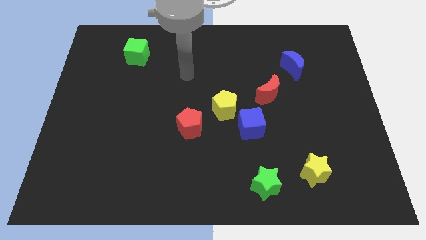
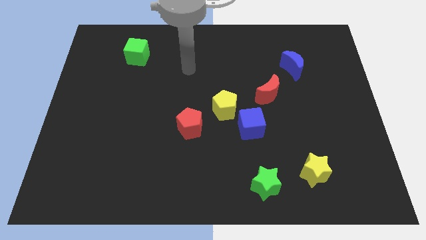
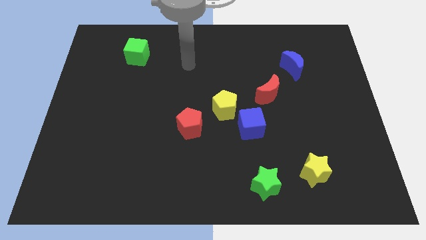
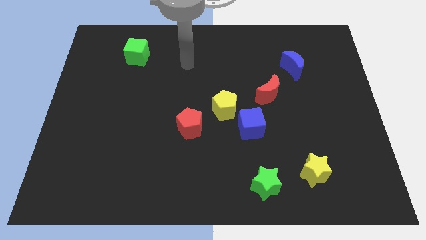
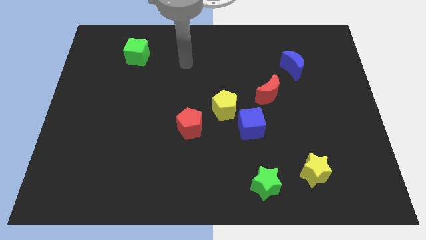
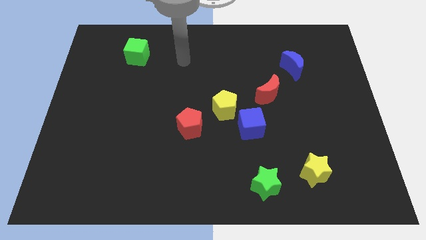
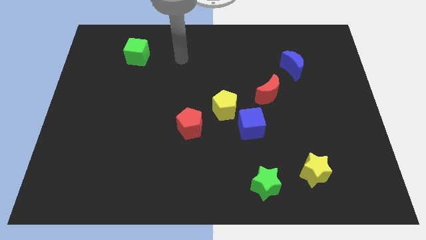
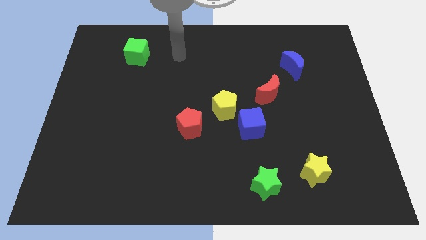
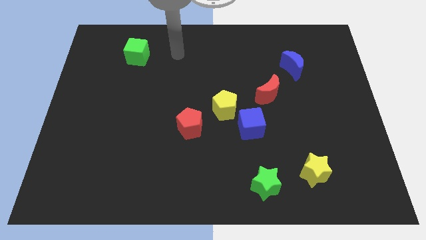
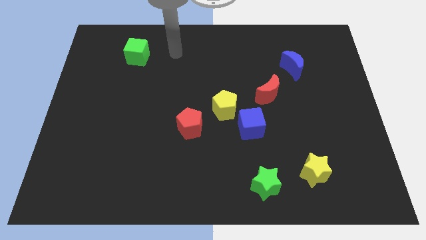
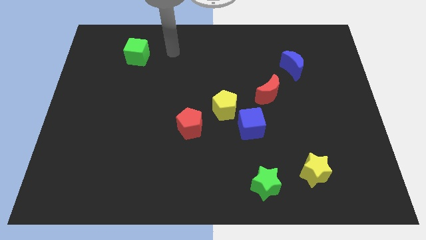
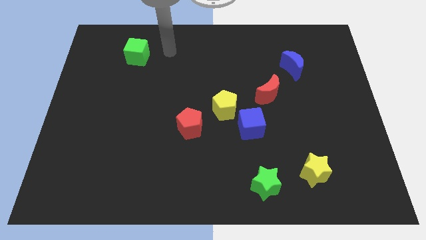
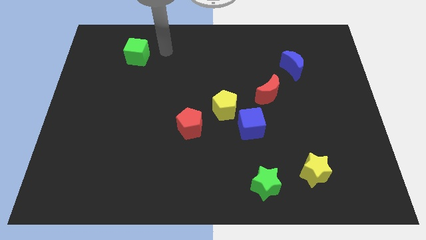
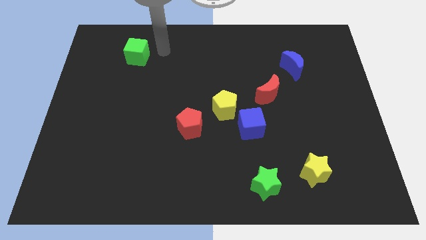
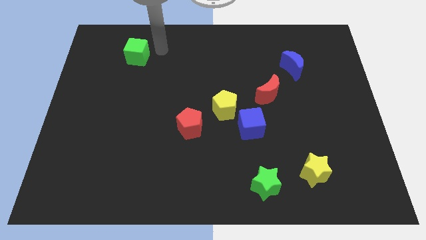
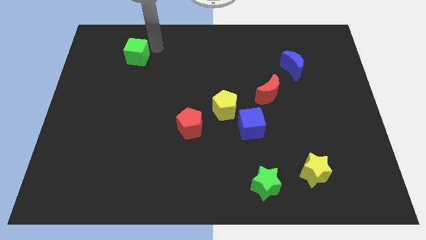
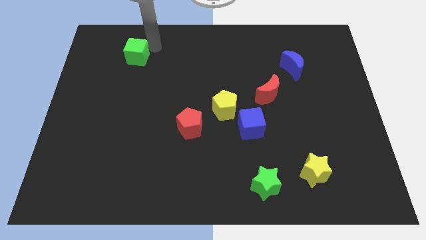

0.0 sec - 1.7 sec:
point your arm to the top of the green cube

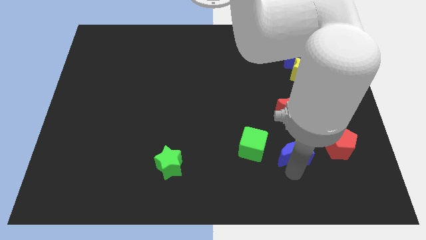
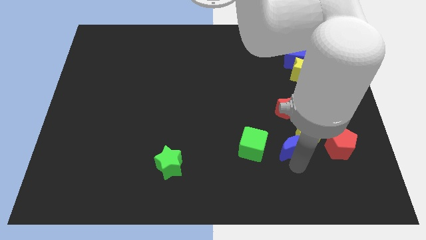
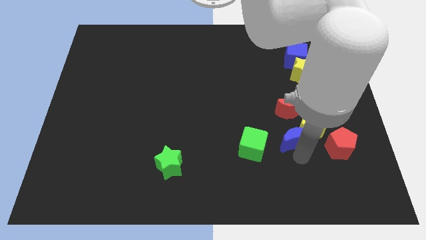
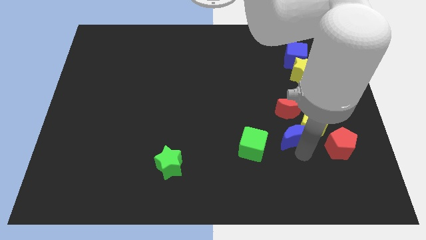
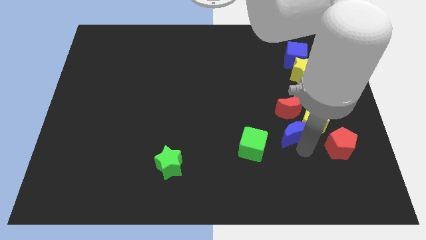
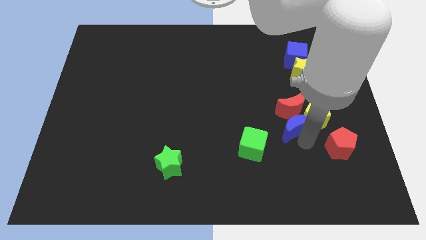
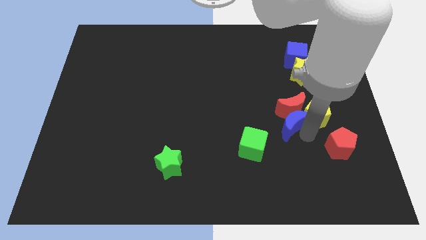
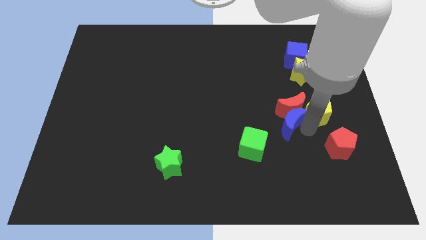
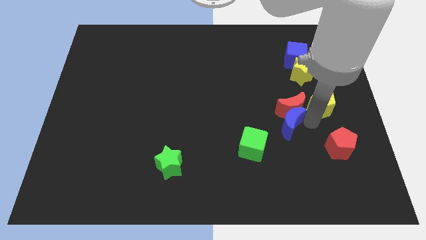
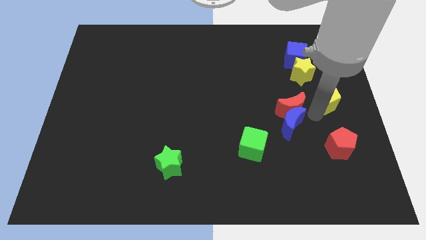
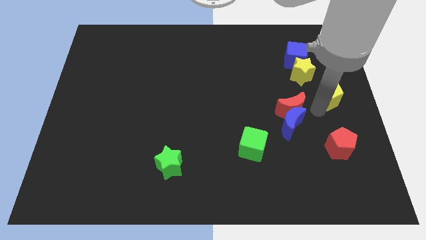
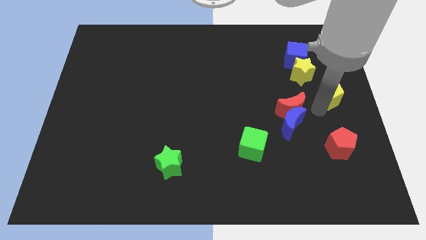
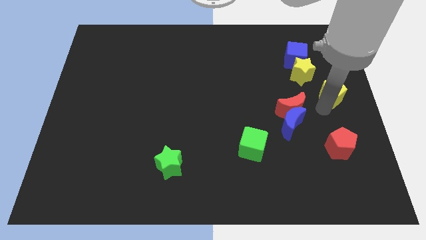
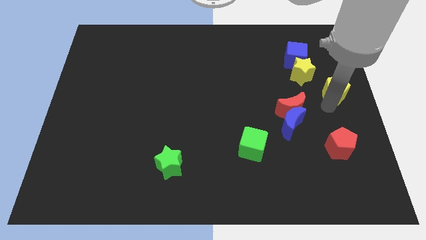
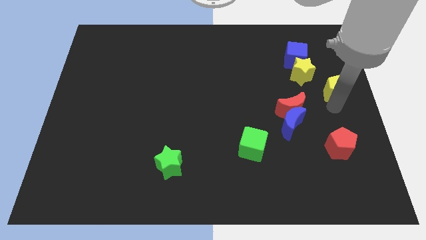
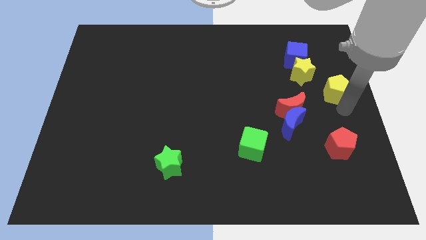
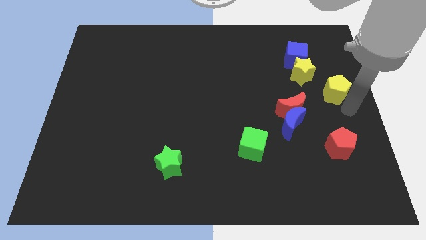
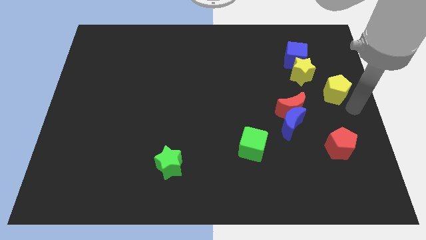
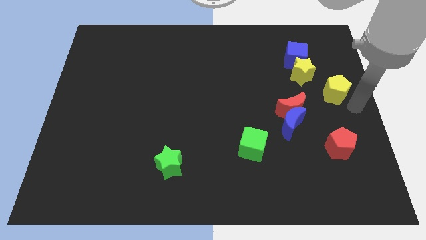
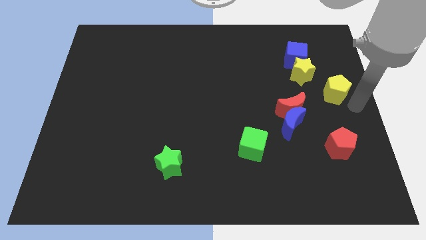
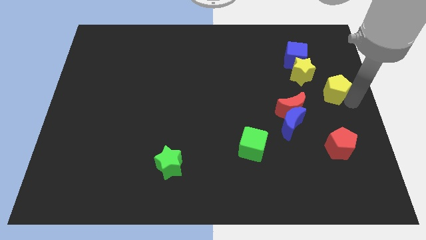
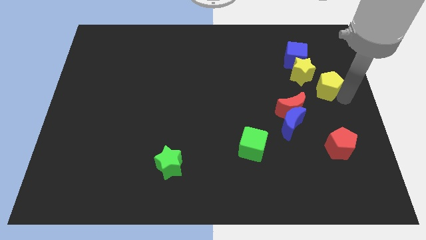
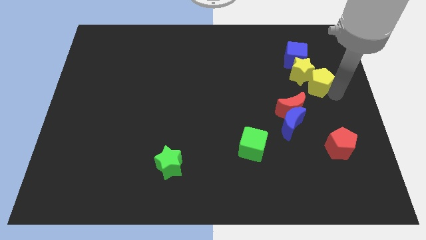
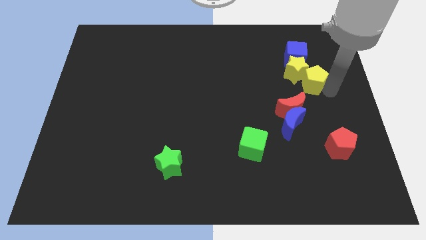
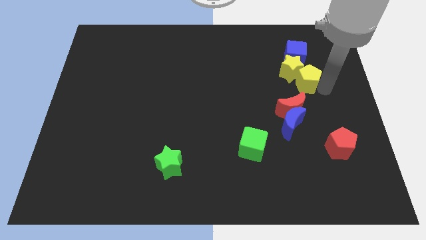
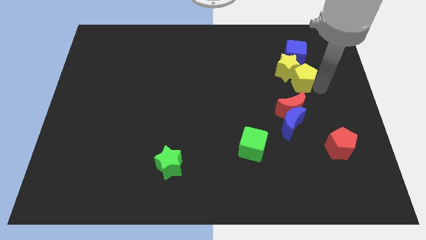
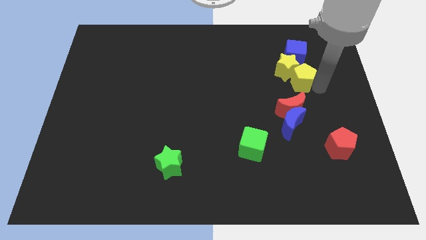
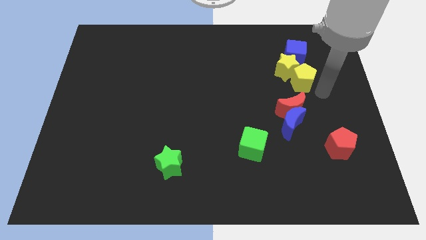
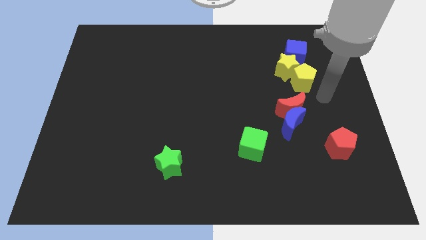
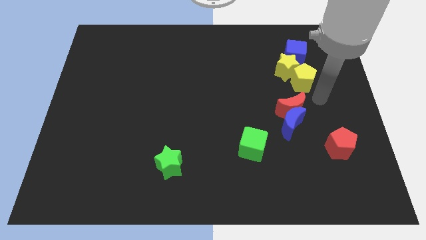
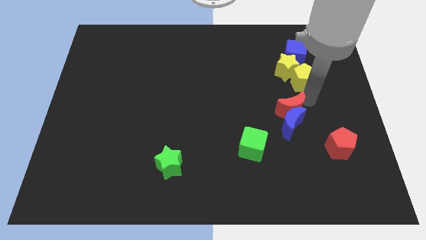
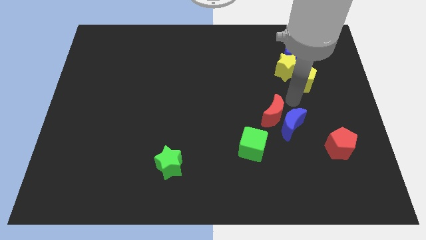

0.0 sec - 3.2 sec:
slide the yellow pentagon into the yellow star

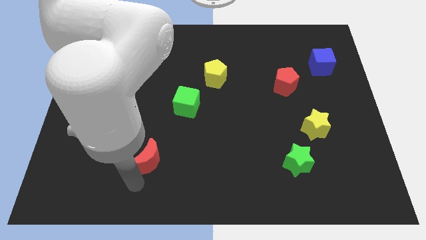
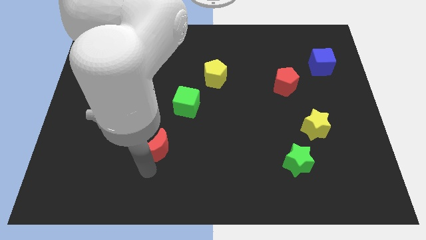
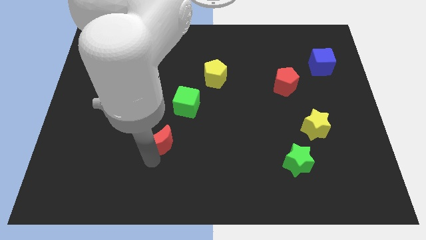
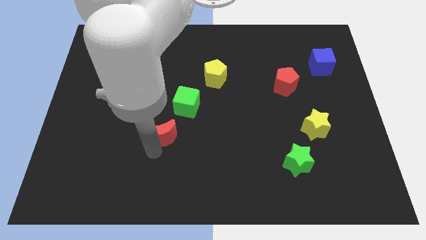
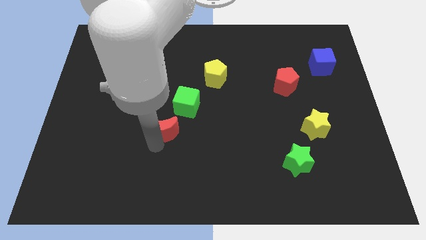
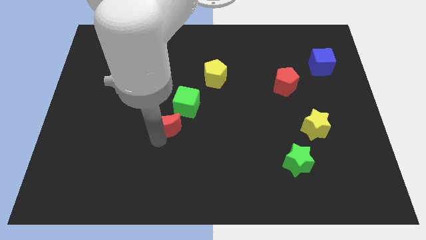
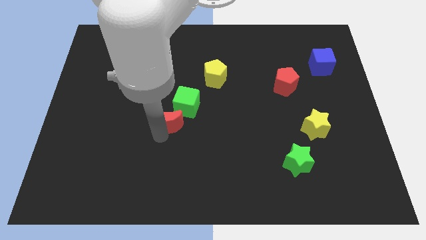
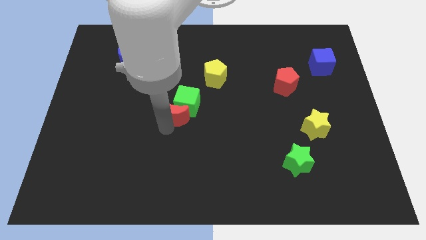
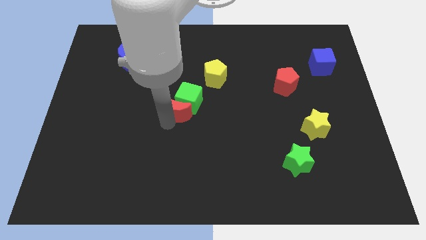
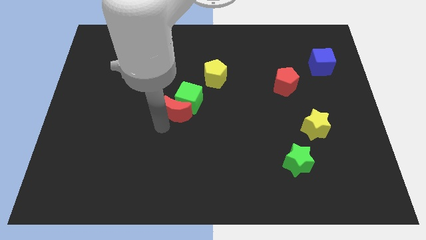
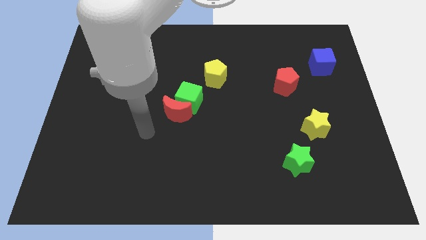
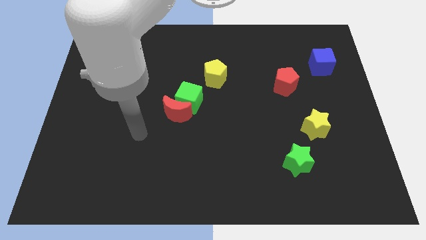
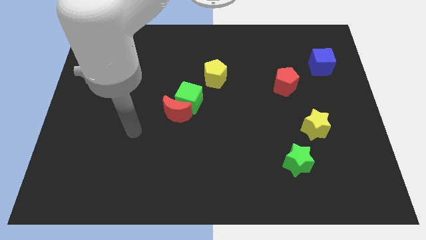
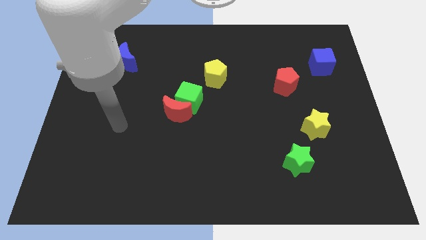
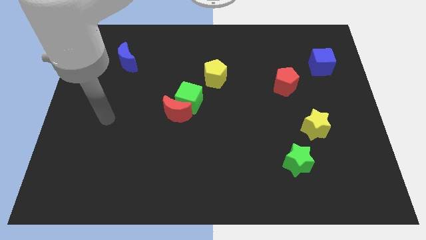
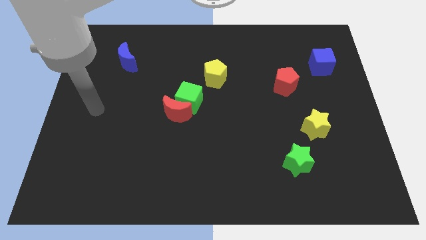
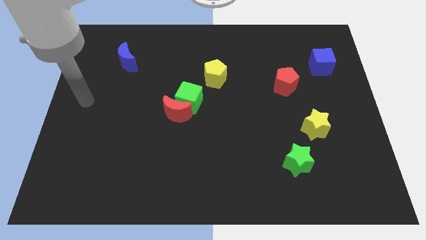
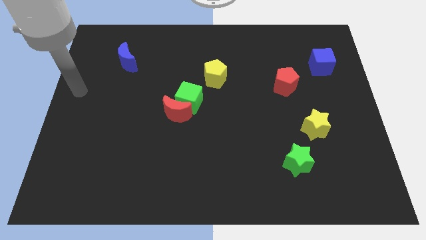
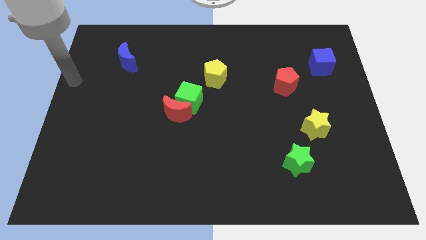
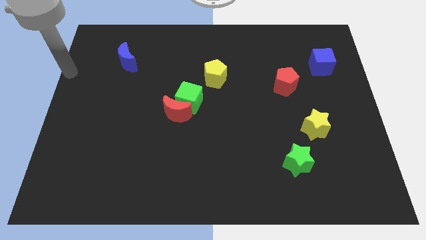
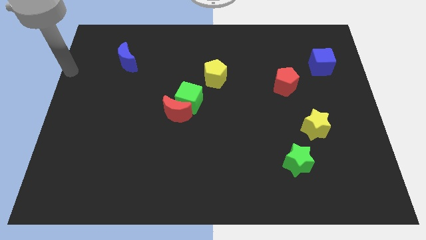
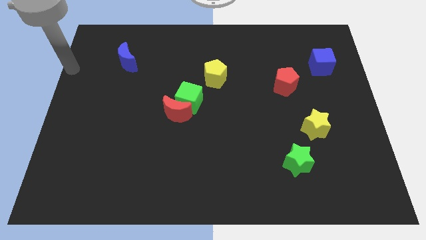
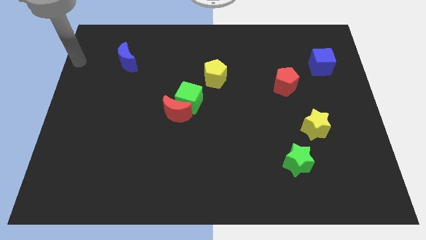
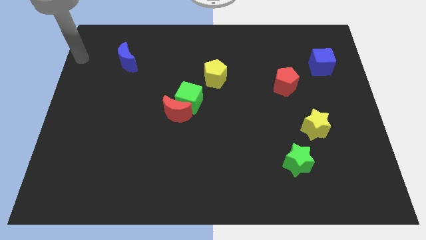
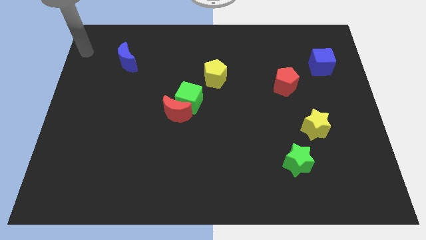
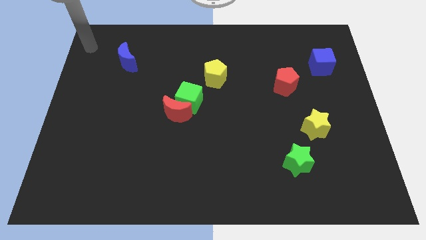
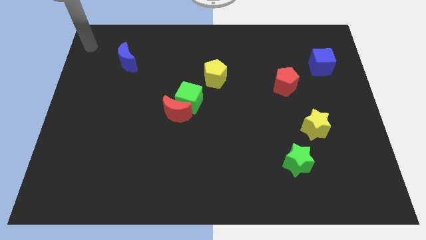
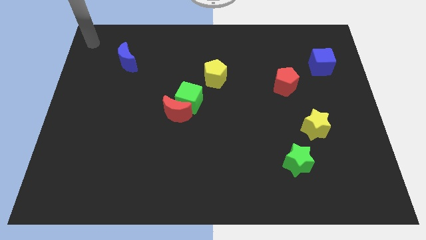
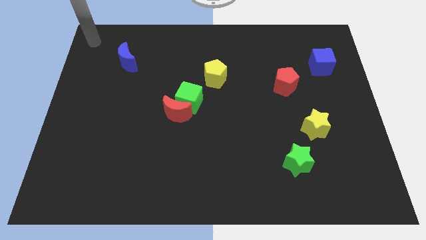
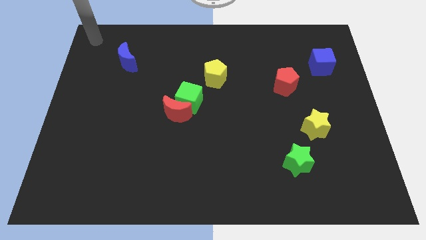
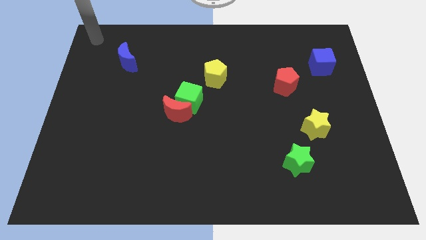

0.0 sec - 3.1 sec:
push the red moon into the bottom of the green cube

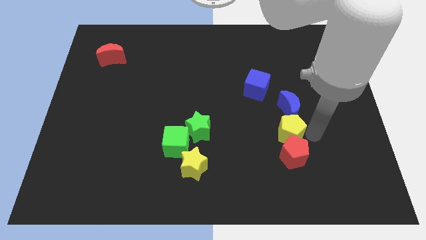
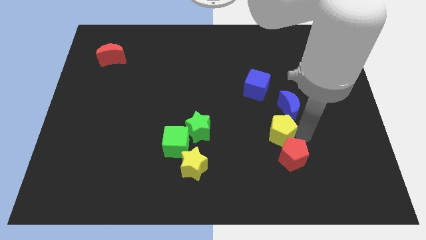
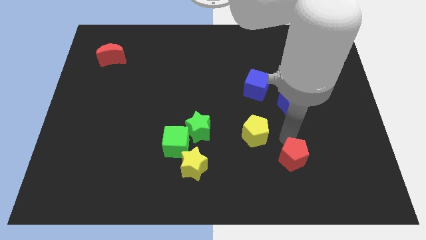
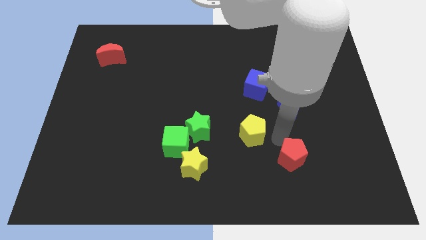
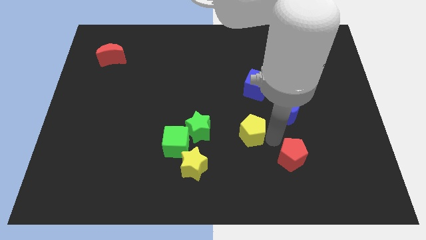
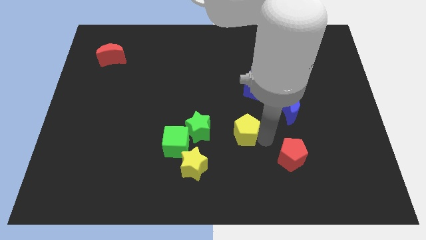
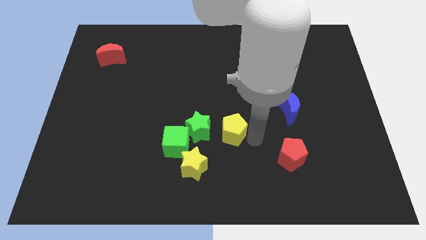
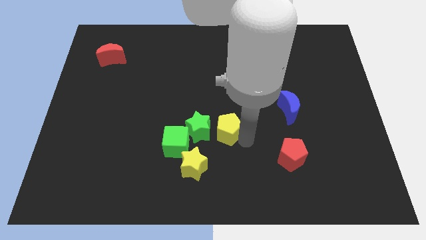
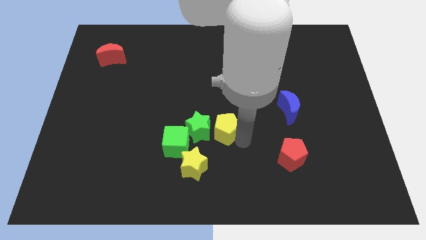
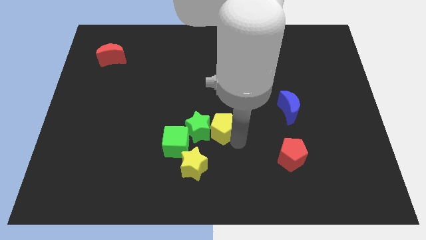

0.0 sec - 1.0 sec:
place yellow pentagon to the right of ghreen star
